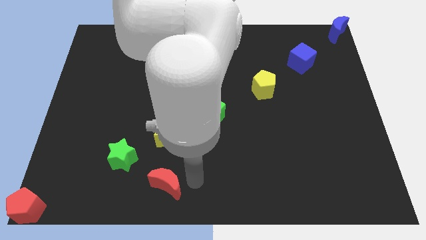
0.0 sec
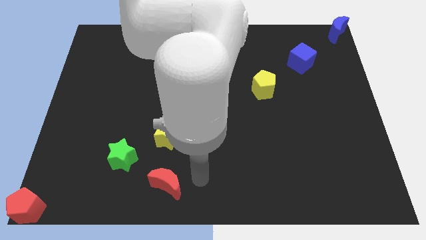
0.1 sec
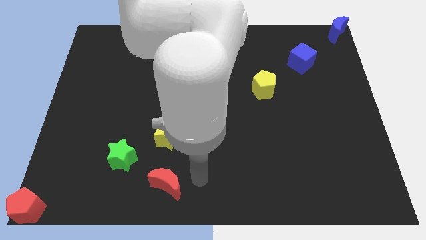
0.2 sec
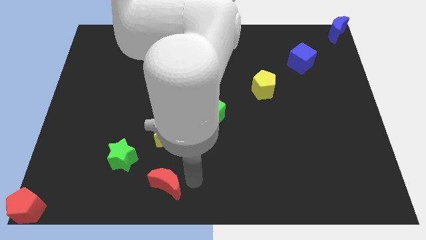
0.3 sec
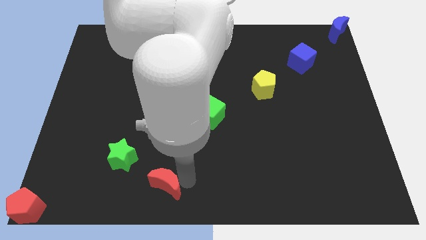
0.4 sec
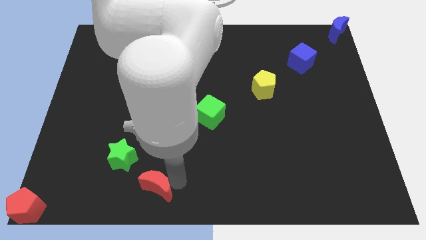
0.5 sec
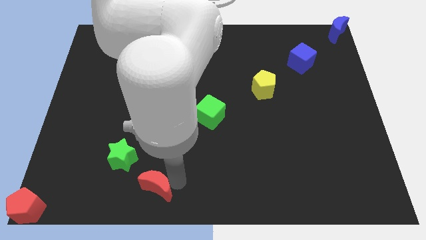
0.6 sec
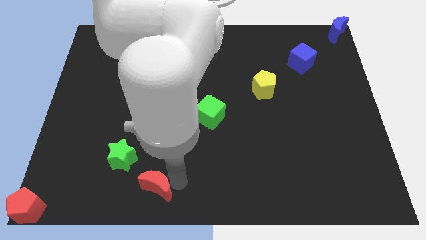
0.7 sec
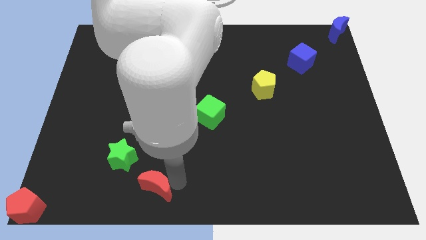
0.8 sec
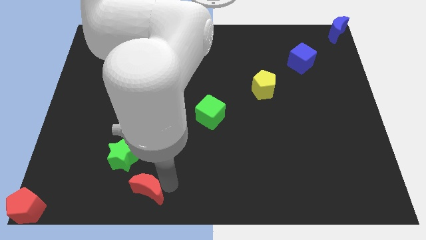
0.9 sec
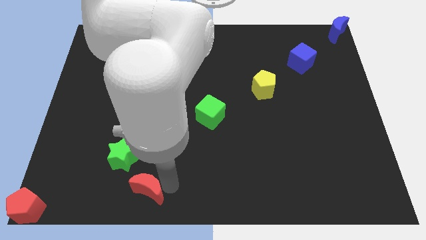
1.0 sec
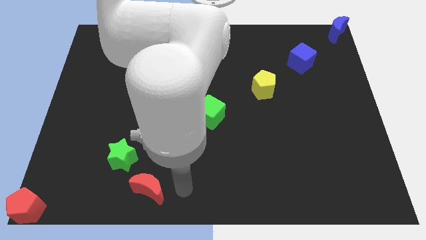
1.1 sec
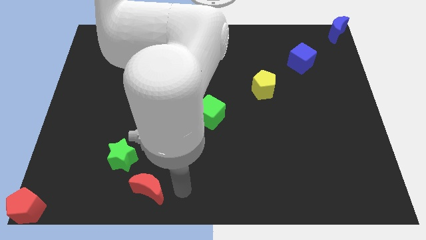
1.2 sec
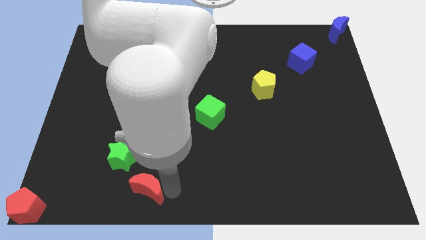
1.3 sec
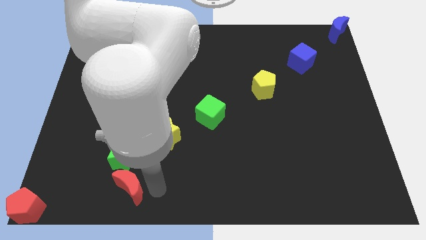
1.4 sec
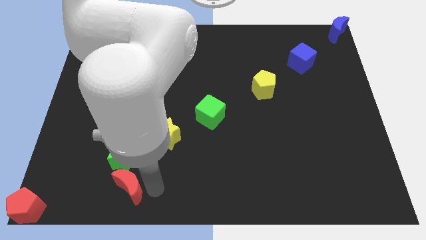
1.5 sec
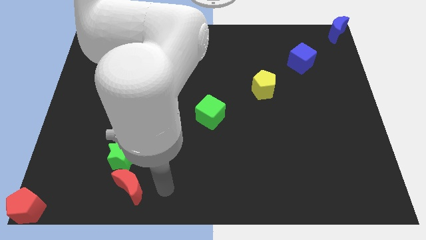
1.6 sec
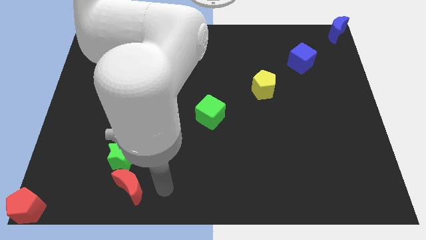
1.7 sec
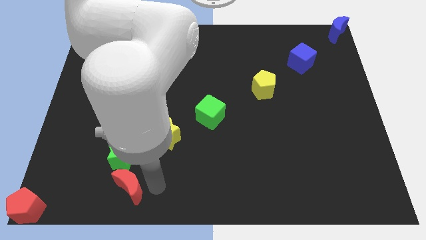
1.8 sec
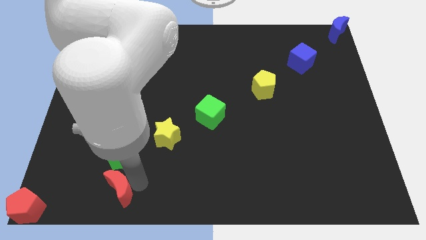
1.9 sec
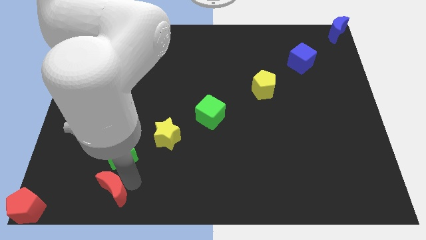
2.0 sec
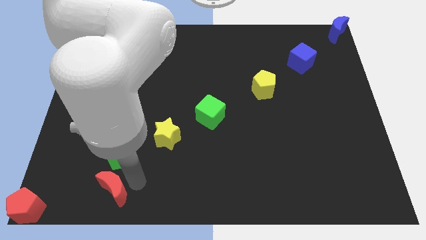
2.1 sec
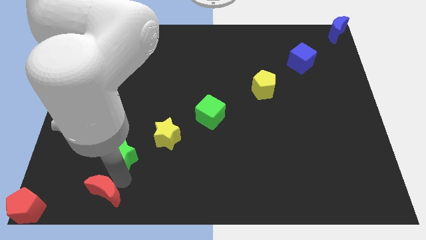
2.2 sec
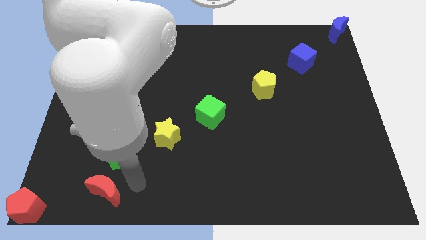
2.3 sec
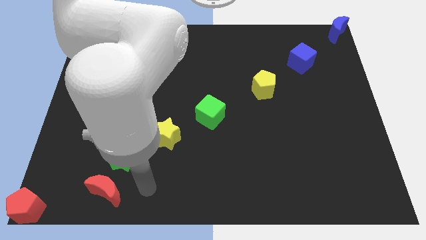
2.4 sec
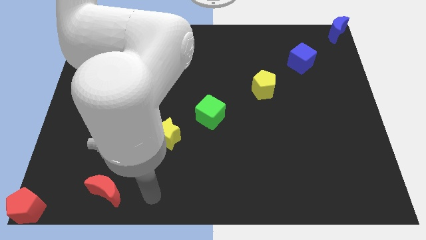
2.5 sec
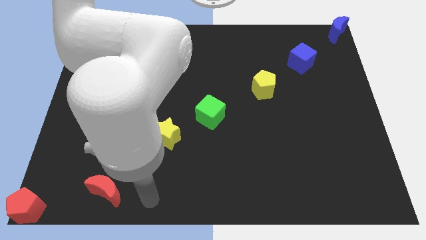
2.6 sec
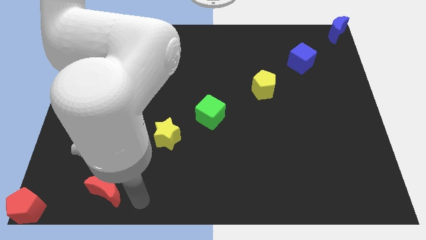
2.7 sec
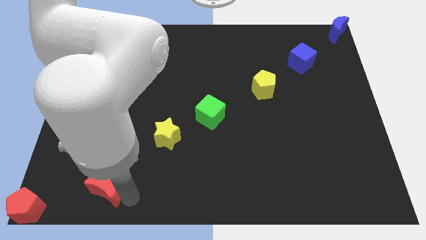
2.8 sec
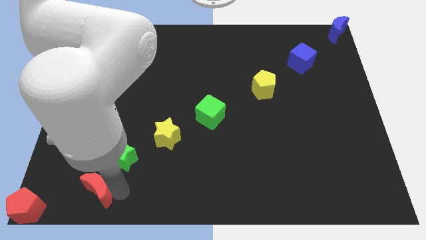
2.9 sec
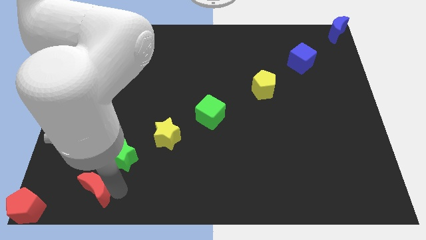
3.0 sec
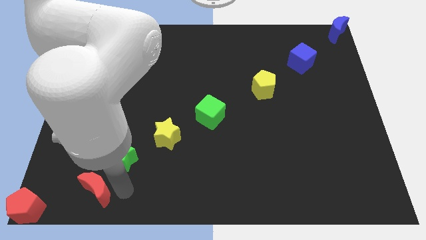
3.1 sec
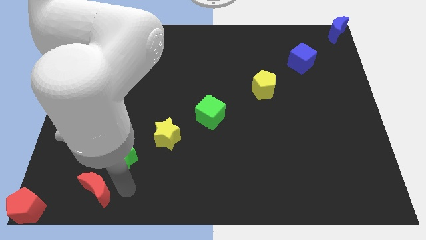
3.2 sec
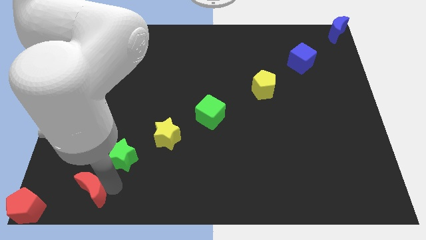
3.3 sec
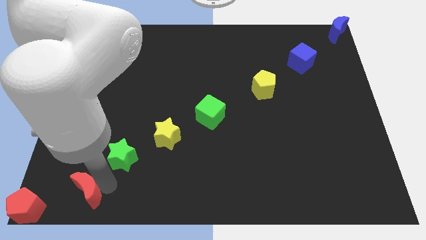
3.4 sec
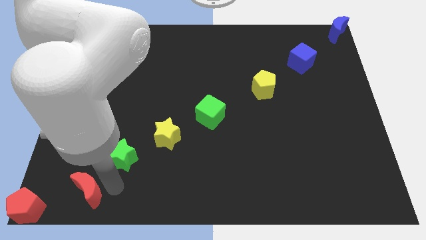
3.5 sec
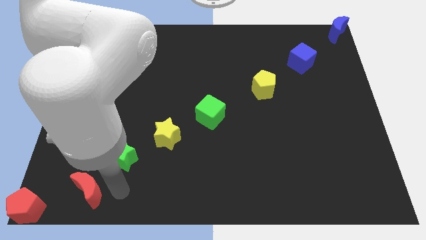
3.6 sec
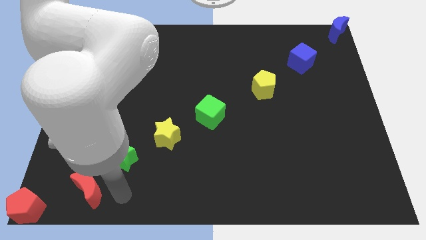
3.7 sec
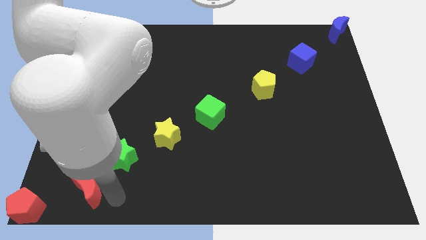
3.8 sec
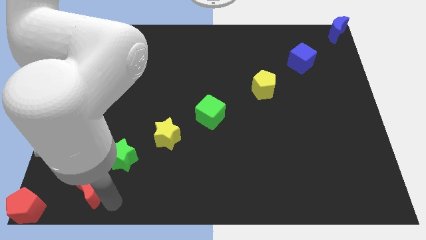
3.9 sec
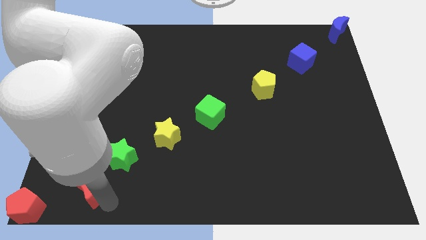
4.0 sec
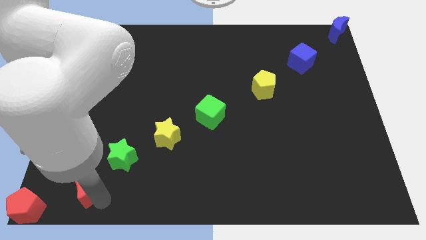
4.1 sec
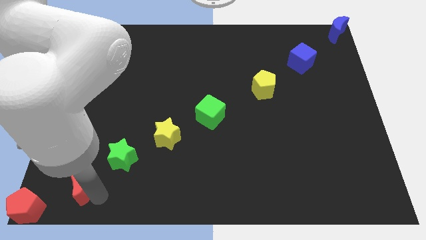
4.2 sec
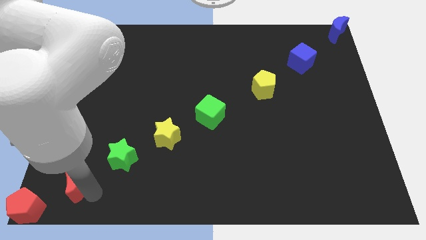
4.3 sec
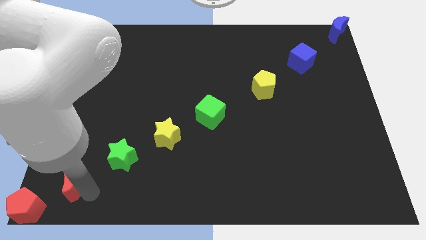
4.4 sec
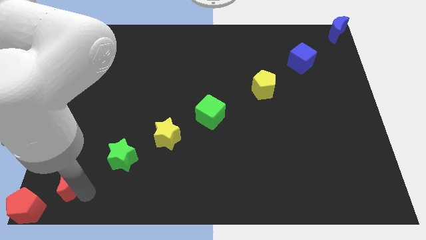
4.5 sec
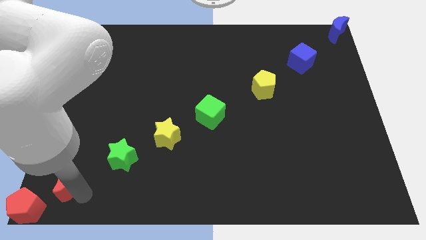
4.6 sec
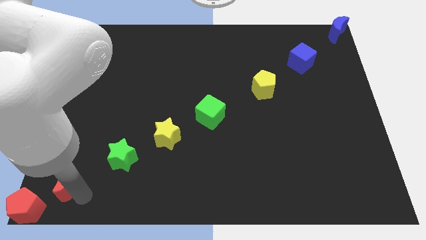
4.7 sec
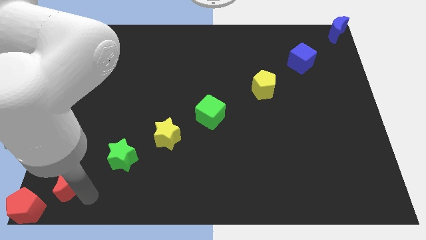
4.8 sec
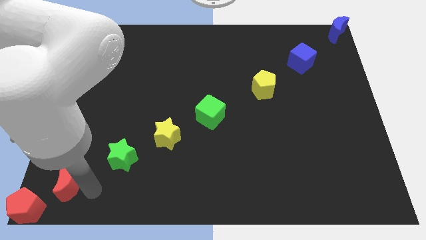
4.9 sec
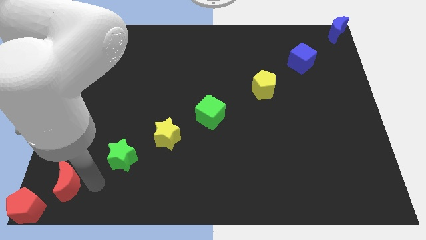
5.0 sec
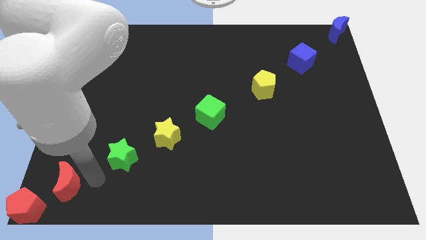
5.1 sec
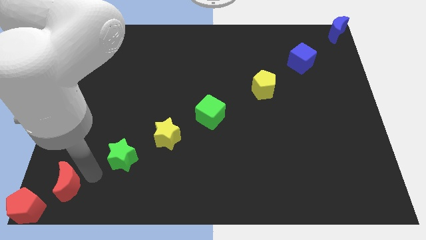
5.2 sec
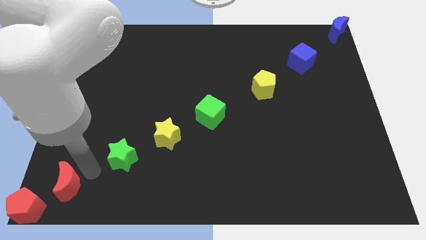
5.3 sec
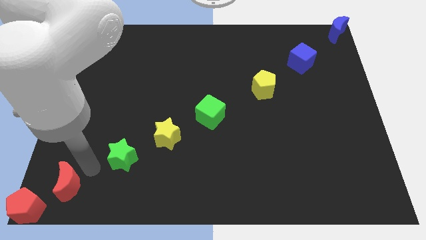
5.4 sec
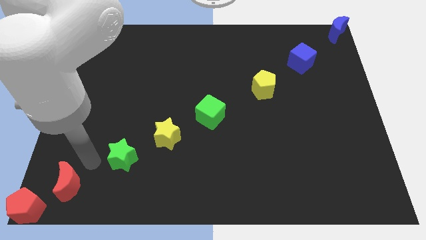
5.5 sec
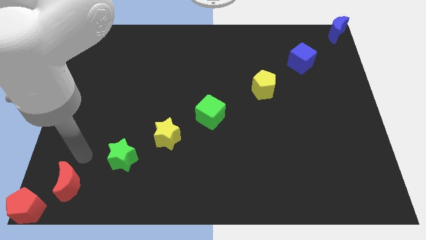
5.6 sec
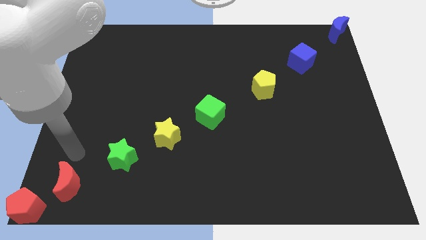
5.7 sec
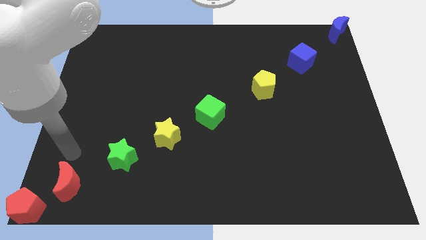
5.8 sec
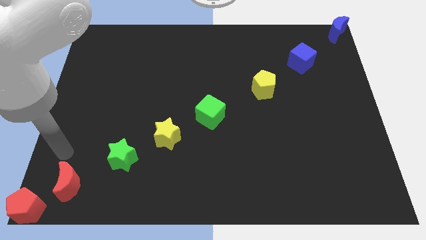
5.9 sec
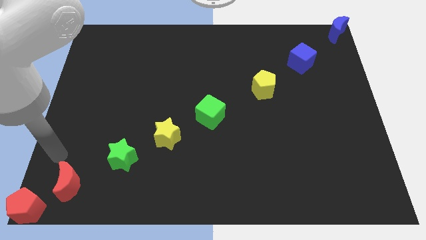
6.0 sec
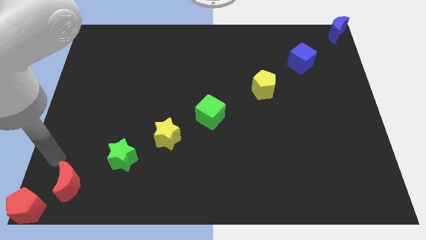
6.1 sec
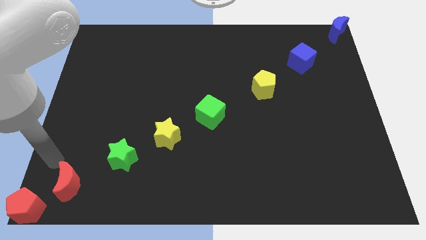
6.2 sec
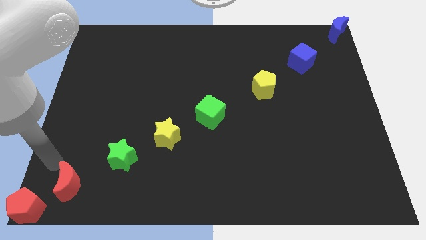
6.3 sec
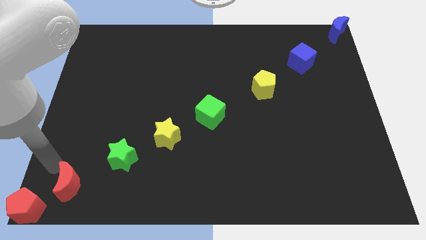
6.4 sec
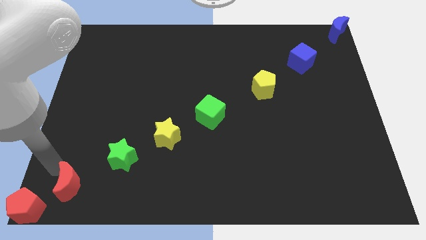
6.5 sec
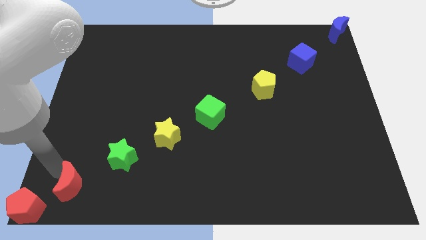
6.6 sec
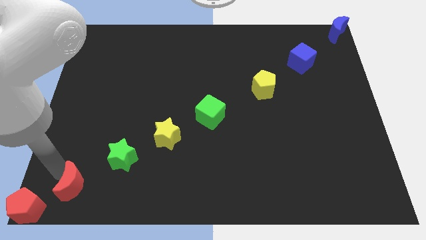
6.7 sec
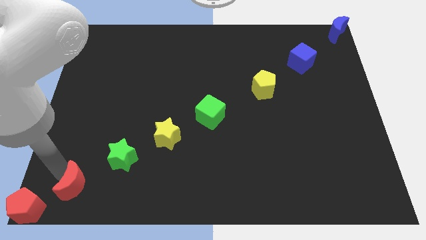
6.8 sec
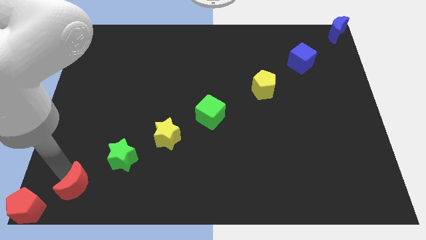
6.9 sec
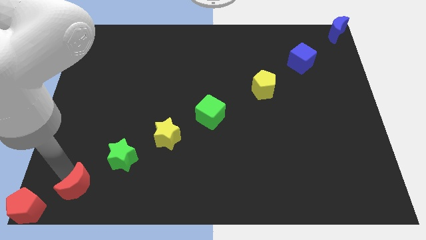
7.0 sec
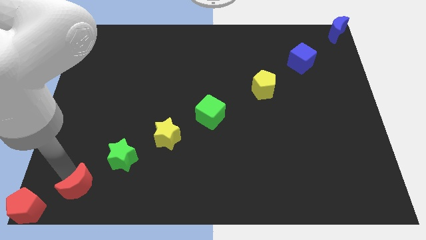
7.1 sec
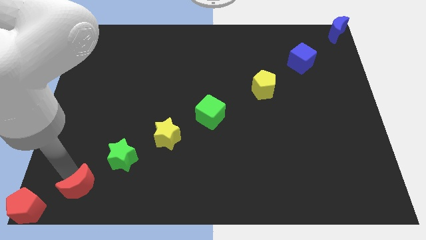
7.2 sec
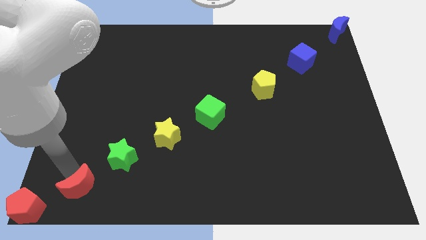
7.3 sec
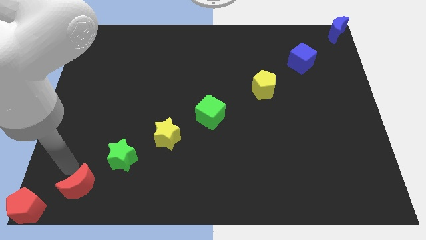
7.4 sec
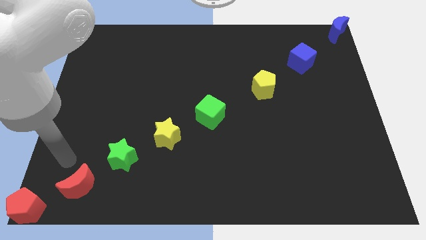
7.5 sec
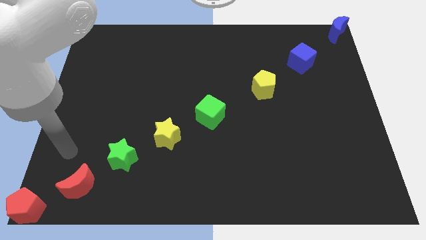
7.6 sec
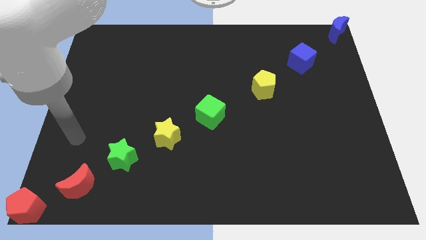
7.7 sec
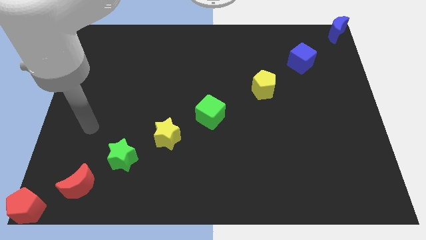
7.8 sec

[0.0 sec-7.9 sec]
place the red crescent in between the green star and red pentagon

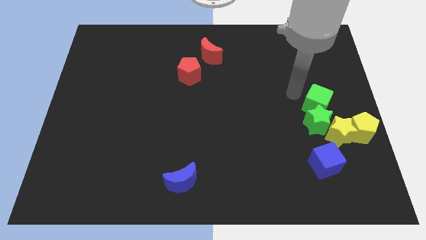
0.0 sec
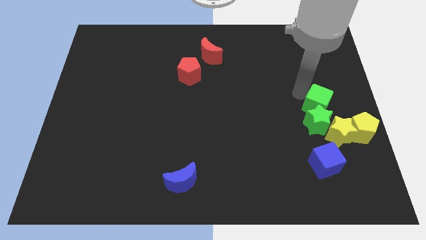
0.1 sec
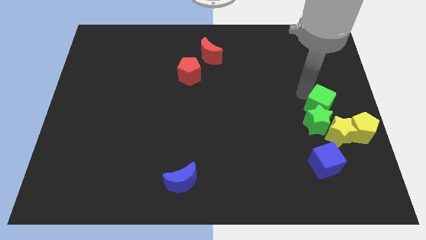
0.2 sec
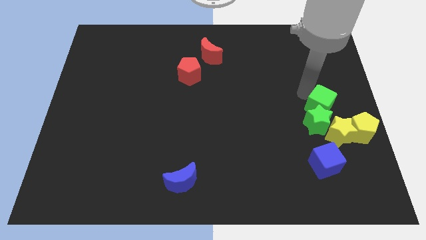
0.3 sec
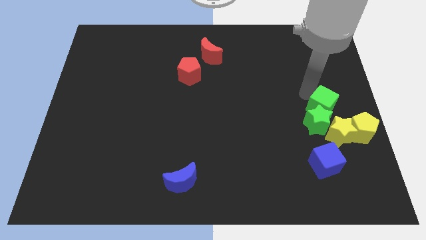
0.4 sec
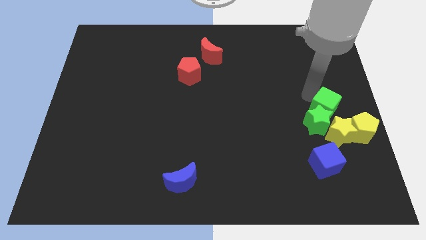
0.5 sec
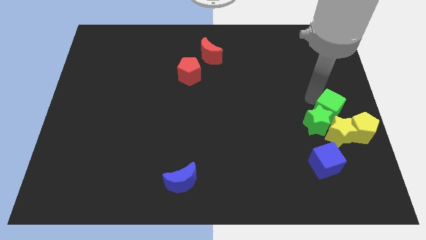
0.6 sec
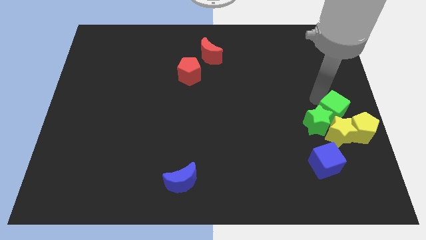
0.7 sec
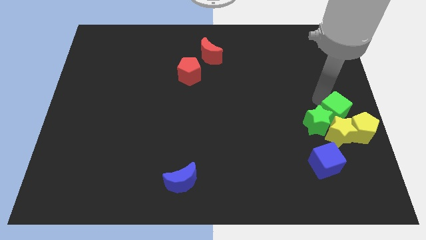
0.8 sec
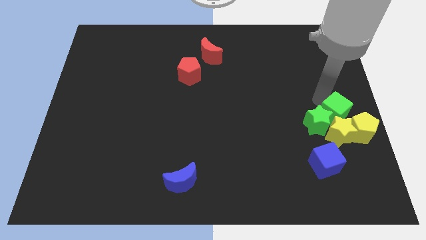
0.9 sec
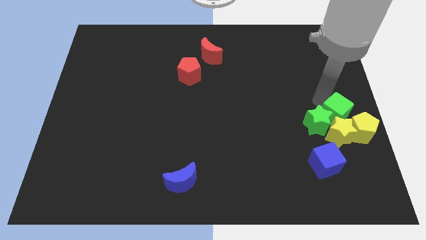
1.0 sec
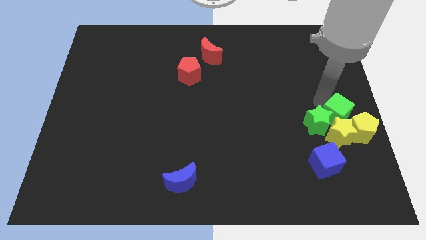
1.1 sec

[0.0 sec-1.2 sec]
place green cube to the top of yellow star
